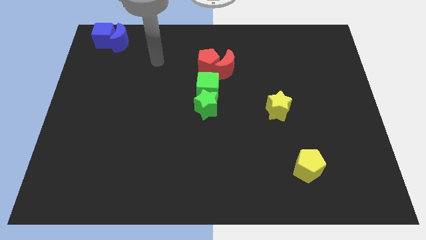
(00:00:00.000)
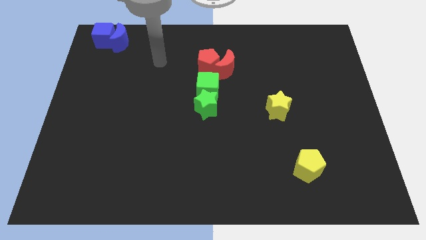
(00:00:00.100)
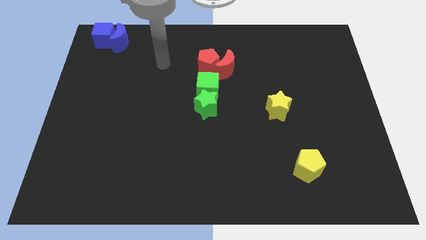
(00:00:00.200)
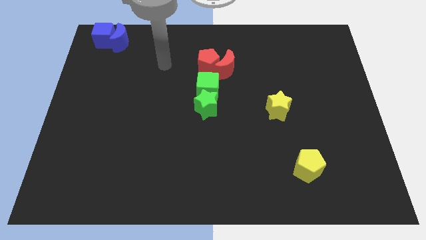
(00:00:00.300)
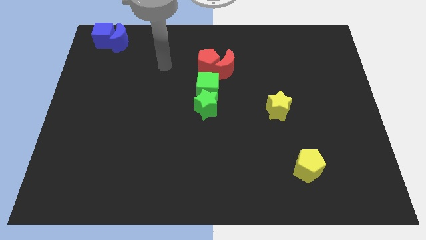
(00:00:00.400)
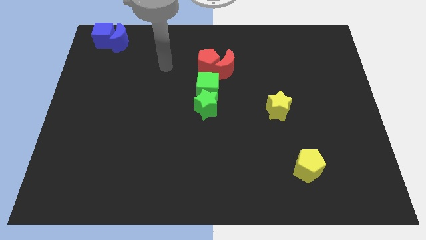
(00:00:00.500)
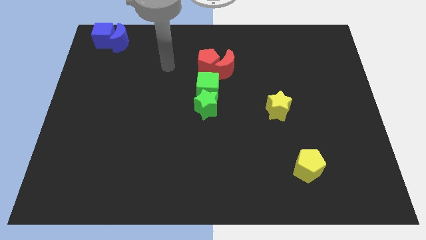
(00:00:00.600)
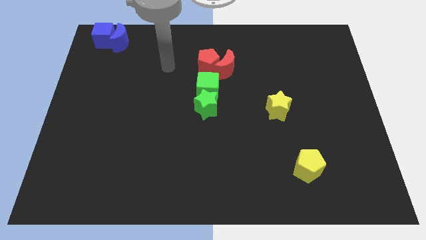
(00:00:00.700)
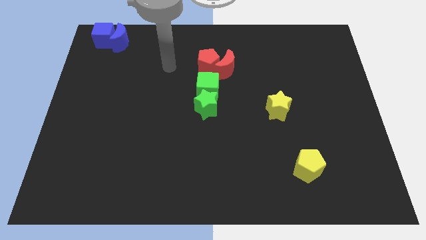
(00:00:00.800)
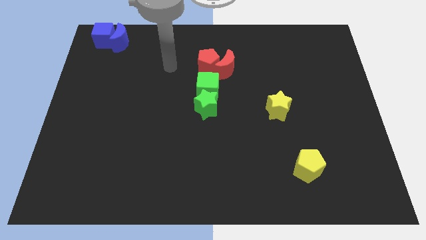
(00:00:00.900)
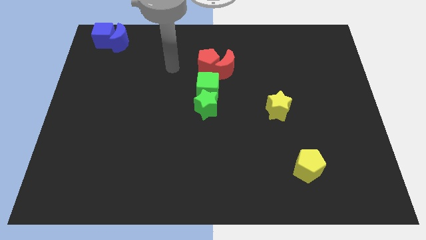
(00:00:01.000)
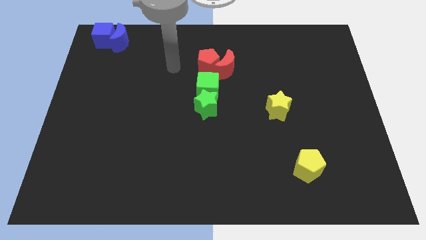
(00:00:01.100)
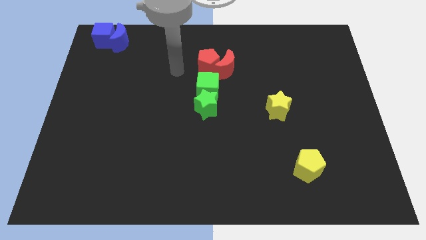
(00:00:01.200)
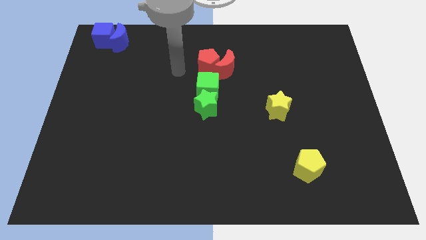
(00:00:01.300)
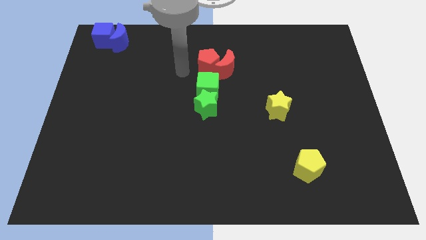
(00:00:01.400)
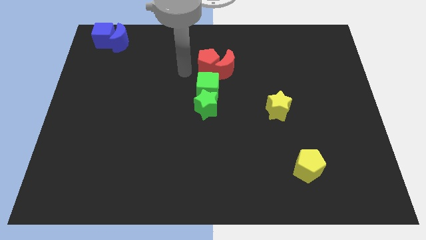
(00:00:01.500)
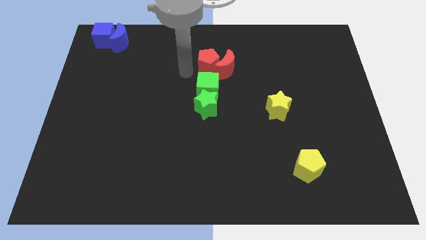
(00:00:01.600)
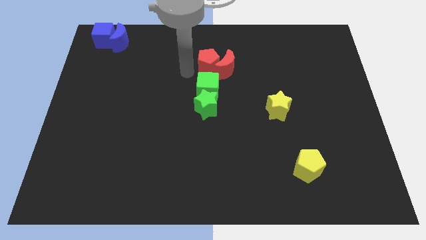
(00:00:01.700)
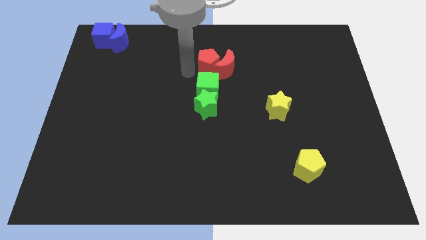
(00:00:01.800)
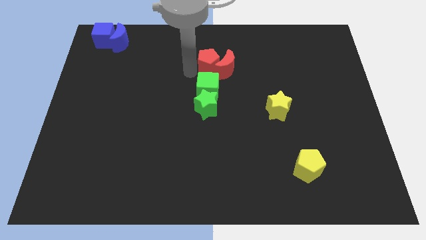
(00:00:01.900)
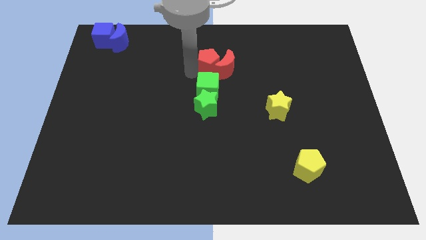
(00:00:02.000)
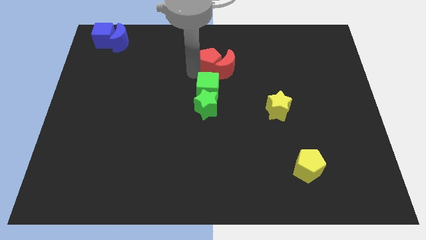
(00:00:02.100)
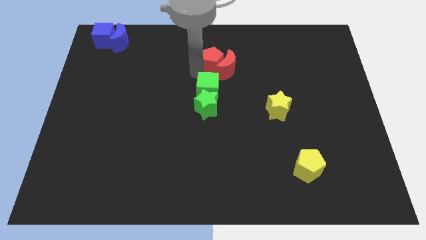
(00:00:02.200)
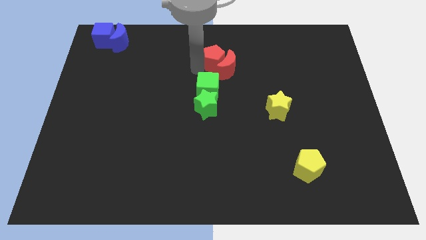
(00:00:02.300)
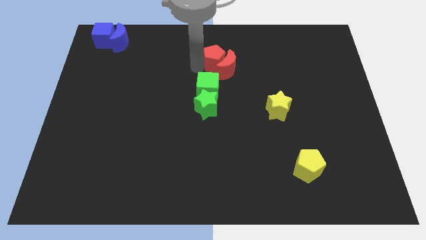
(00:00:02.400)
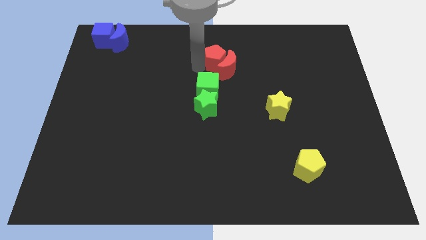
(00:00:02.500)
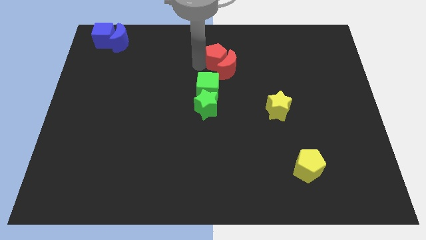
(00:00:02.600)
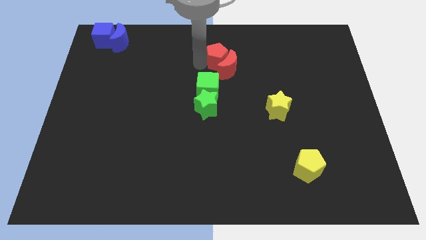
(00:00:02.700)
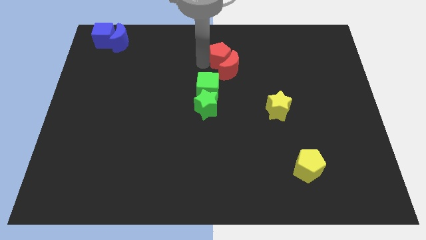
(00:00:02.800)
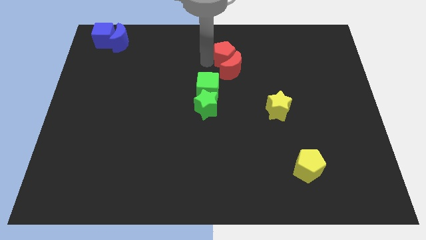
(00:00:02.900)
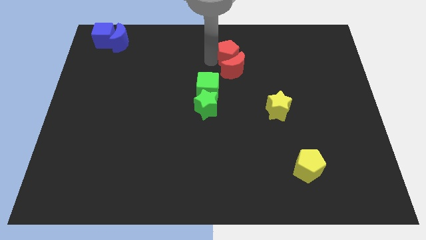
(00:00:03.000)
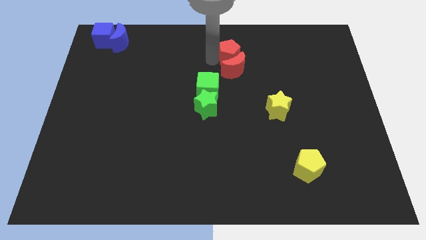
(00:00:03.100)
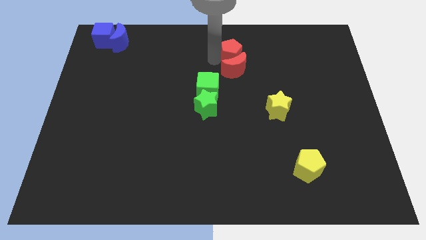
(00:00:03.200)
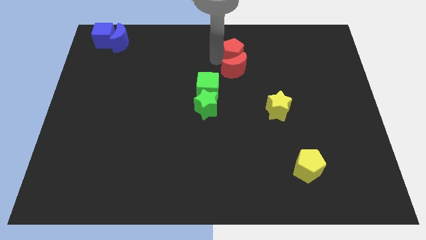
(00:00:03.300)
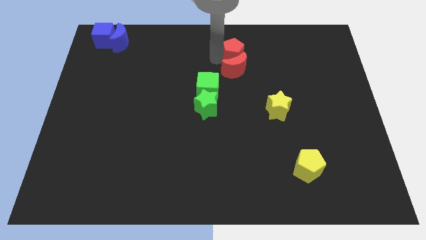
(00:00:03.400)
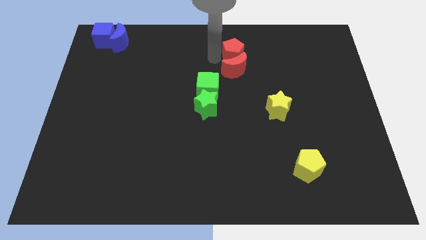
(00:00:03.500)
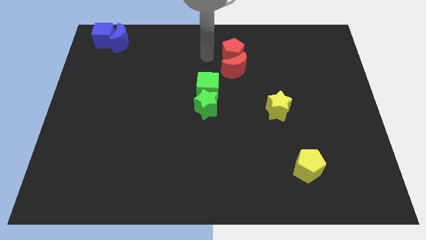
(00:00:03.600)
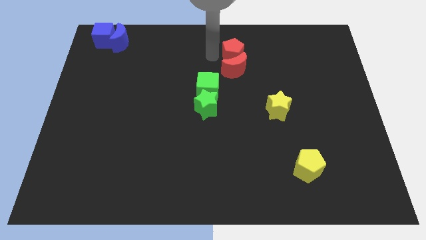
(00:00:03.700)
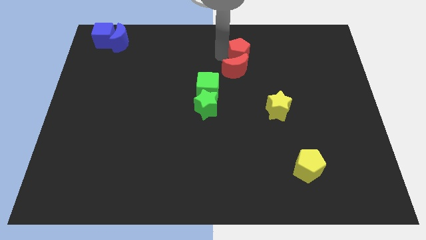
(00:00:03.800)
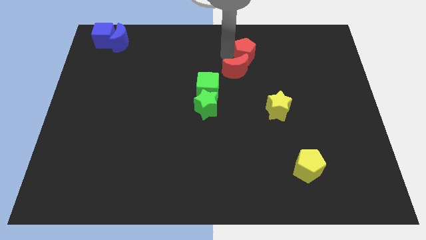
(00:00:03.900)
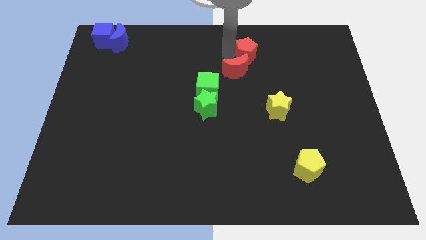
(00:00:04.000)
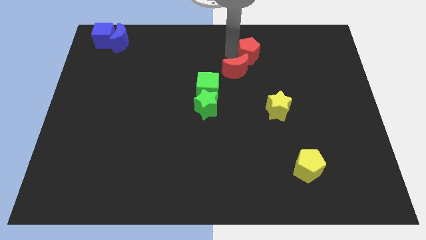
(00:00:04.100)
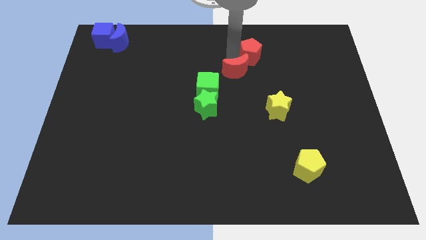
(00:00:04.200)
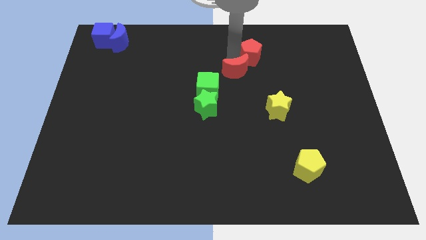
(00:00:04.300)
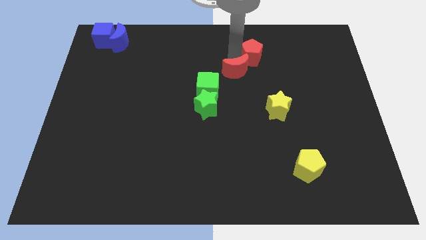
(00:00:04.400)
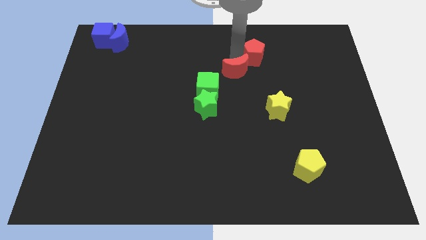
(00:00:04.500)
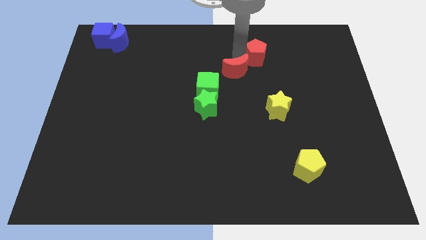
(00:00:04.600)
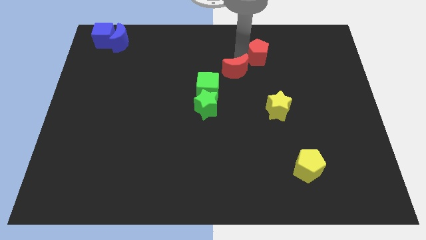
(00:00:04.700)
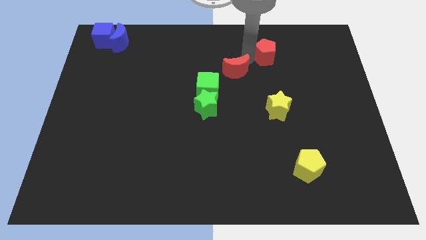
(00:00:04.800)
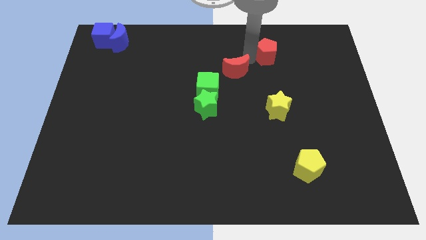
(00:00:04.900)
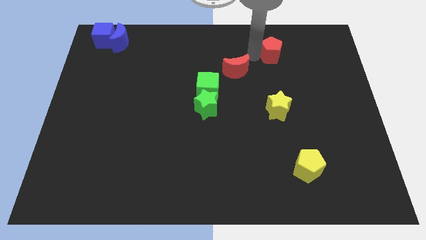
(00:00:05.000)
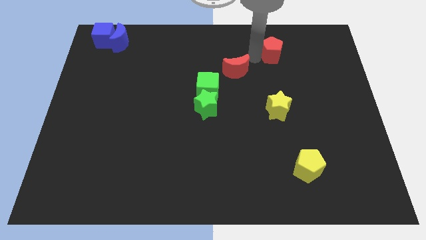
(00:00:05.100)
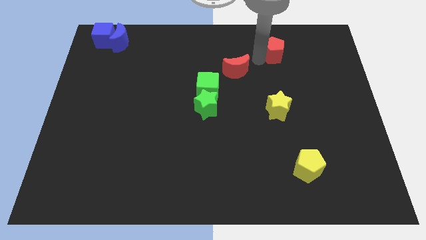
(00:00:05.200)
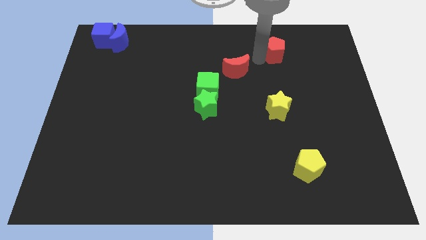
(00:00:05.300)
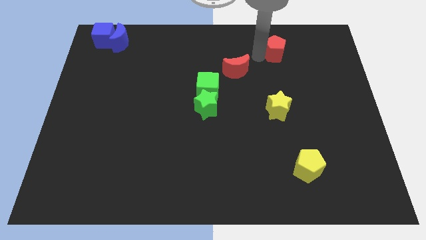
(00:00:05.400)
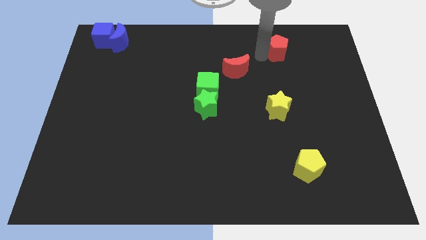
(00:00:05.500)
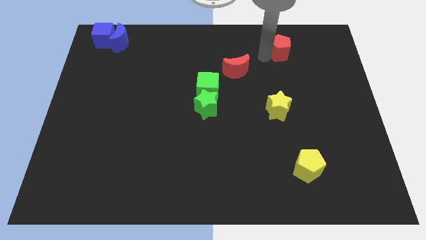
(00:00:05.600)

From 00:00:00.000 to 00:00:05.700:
move the red pentagon away from the red crescent

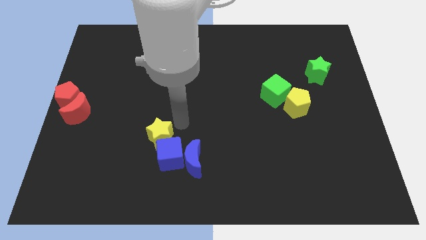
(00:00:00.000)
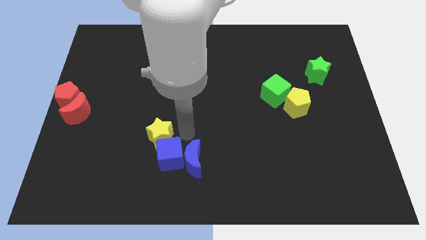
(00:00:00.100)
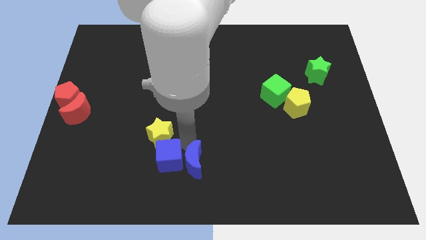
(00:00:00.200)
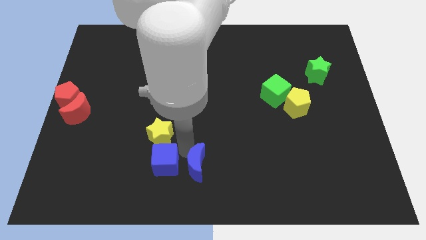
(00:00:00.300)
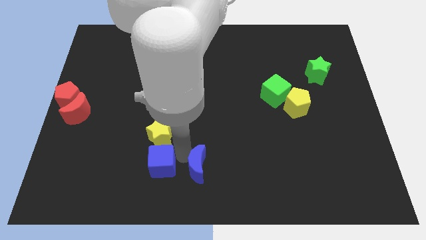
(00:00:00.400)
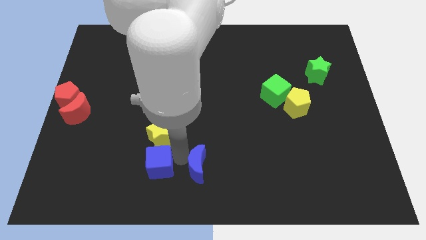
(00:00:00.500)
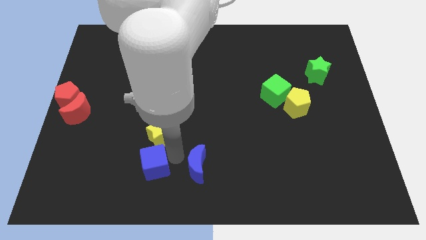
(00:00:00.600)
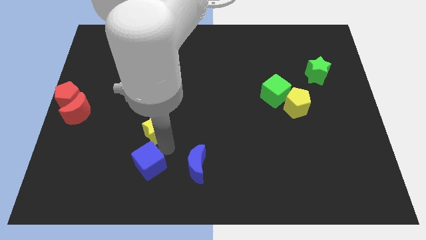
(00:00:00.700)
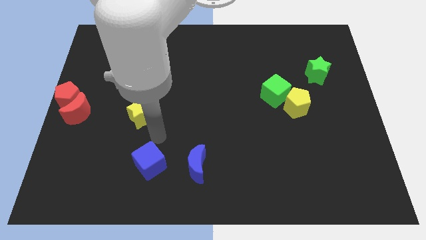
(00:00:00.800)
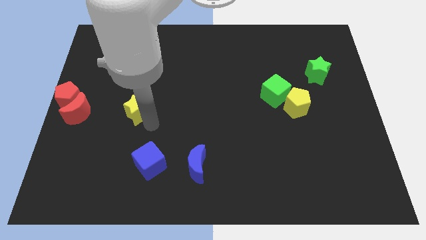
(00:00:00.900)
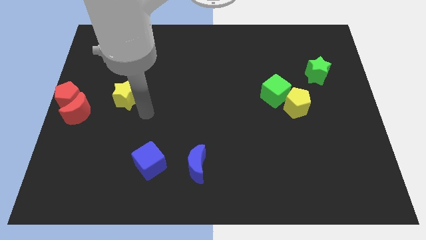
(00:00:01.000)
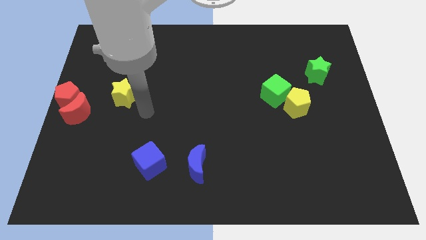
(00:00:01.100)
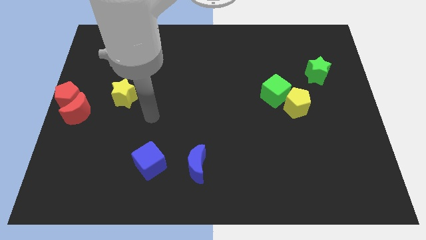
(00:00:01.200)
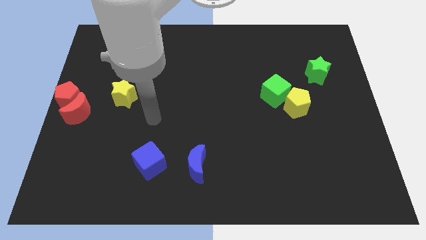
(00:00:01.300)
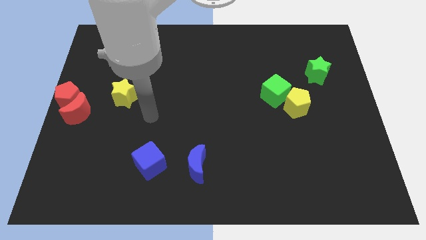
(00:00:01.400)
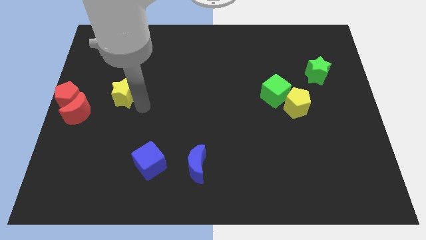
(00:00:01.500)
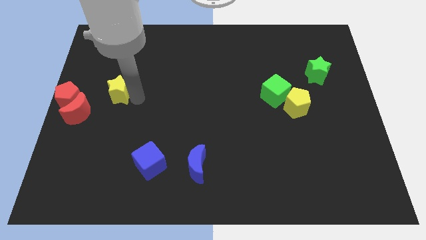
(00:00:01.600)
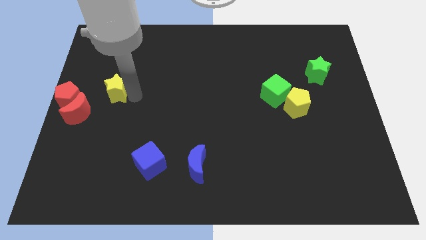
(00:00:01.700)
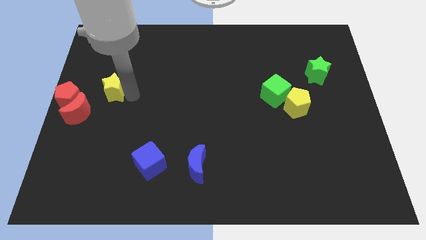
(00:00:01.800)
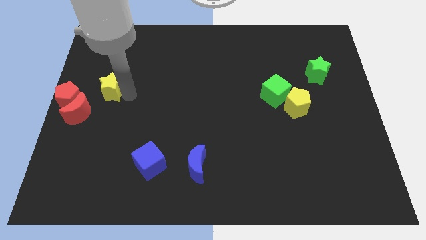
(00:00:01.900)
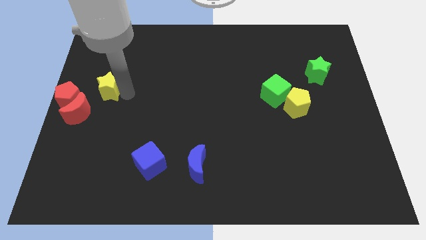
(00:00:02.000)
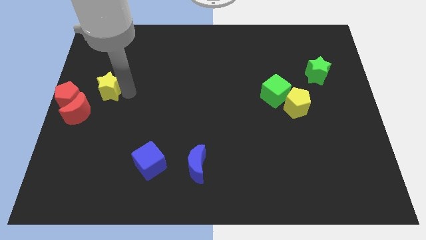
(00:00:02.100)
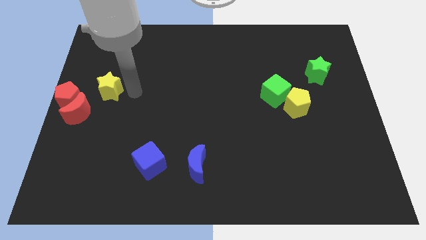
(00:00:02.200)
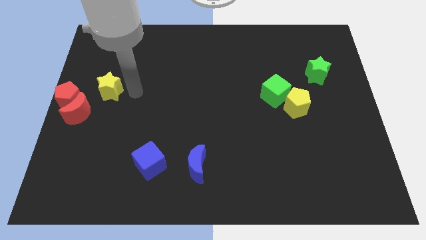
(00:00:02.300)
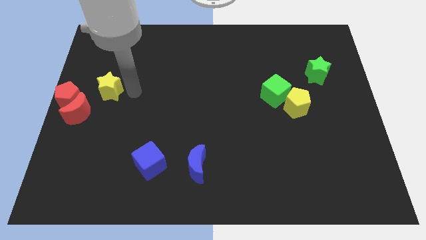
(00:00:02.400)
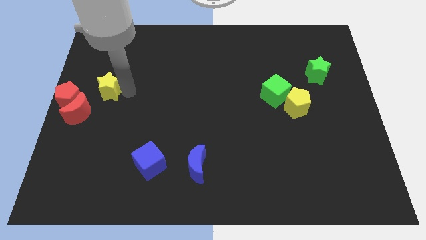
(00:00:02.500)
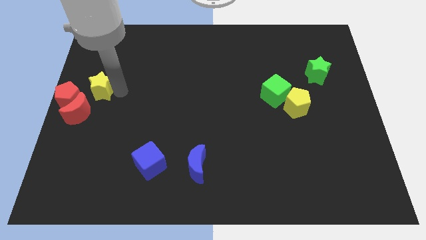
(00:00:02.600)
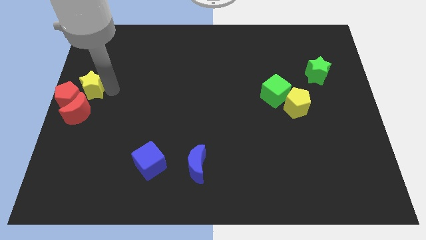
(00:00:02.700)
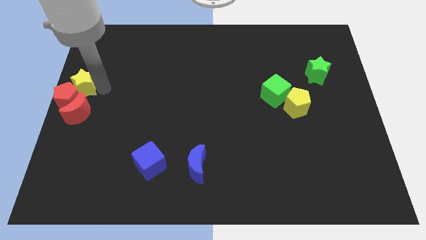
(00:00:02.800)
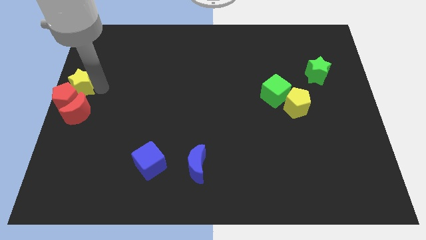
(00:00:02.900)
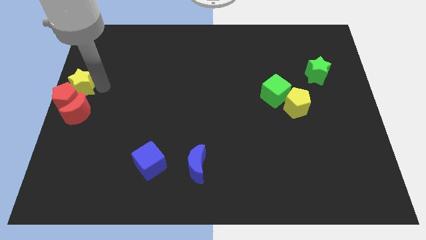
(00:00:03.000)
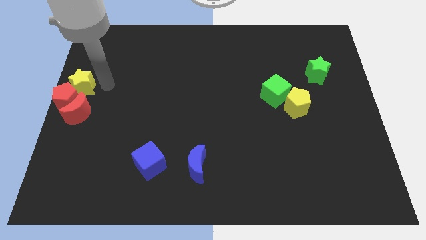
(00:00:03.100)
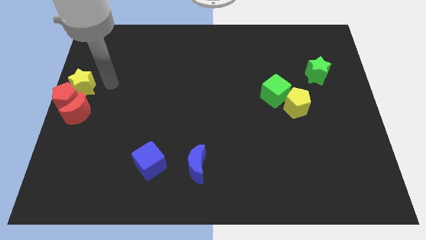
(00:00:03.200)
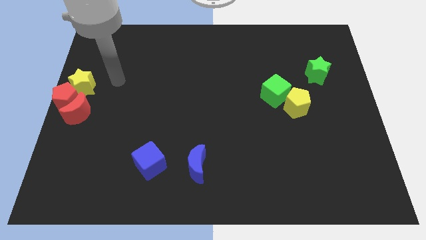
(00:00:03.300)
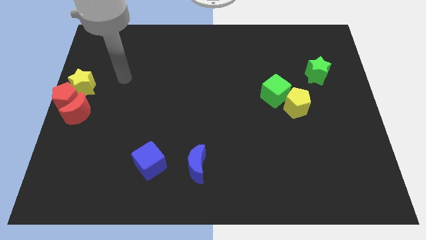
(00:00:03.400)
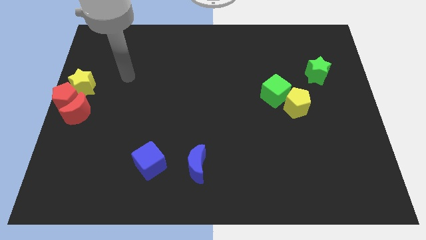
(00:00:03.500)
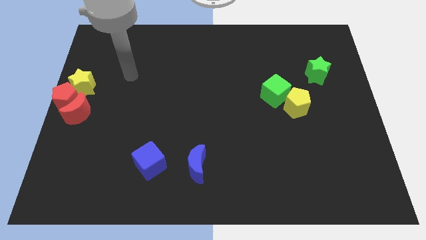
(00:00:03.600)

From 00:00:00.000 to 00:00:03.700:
place the yellow star above the red pentagon
